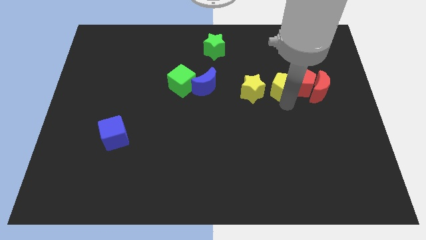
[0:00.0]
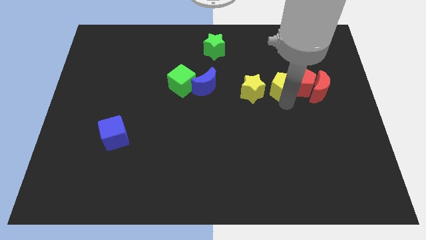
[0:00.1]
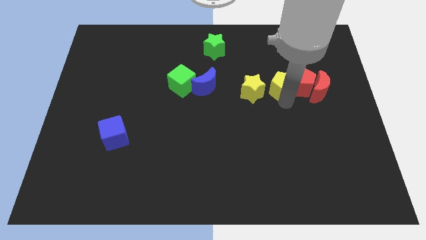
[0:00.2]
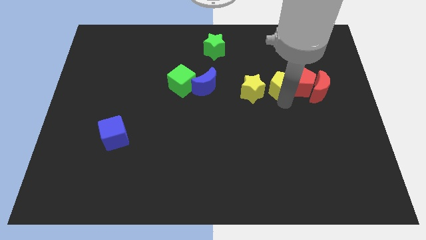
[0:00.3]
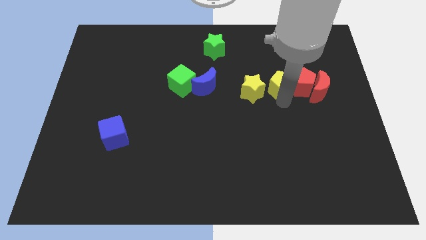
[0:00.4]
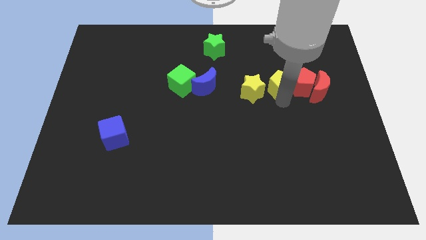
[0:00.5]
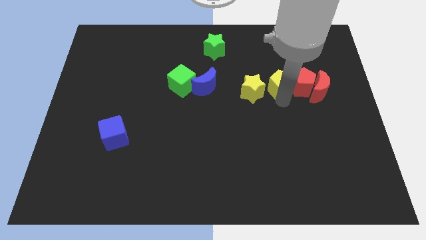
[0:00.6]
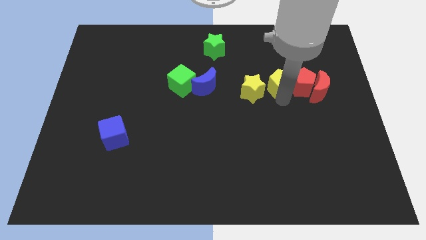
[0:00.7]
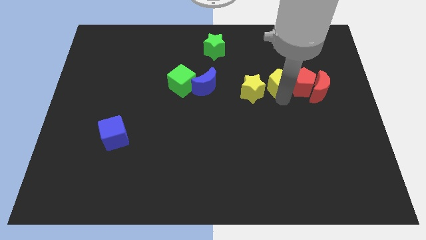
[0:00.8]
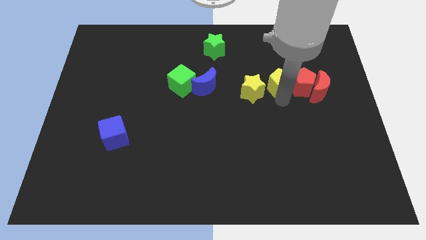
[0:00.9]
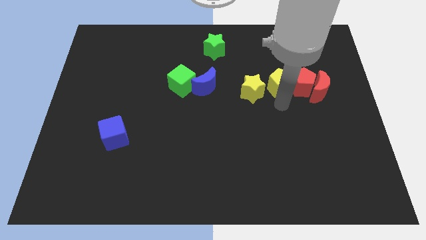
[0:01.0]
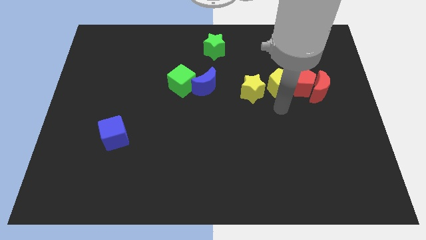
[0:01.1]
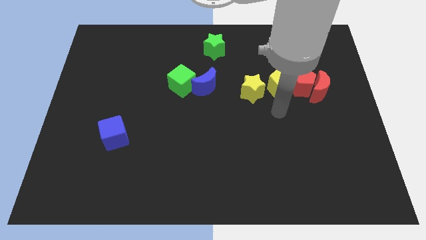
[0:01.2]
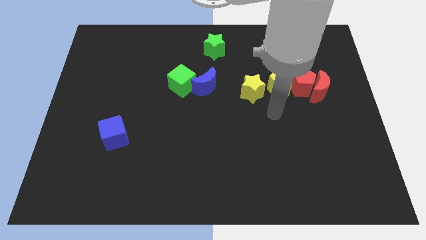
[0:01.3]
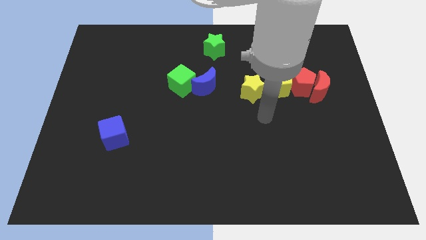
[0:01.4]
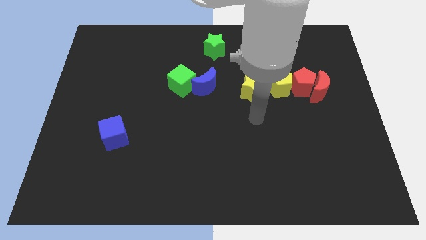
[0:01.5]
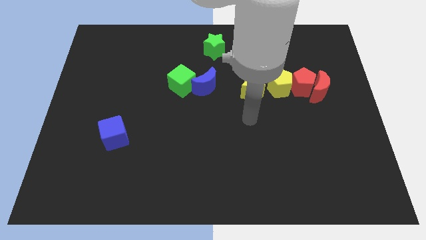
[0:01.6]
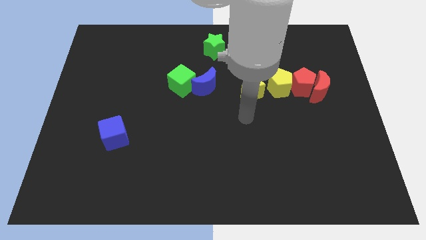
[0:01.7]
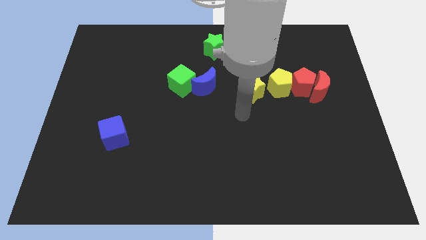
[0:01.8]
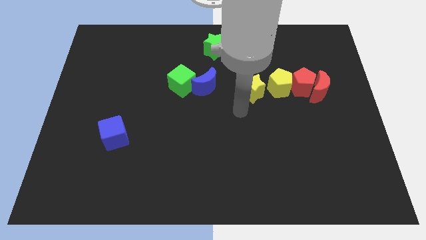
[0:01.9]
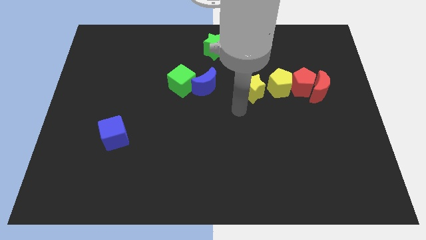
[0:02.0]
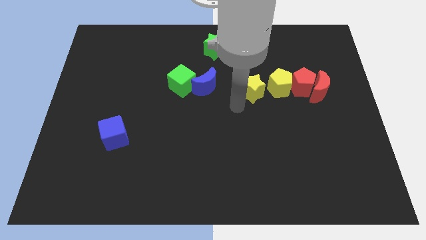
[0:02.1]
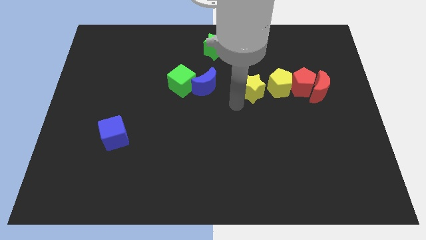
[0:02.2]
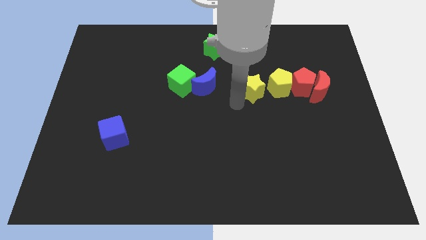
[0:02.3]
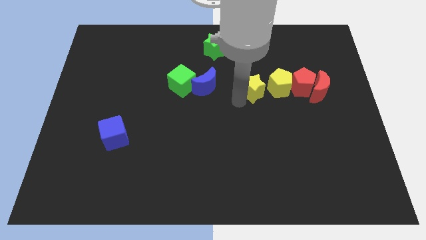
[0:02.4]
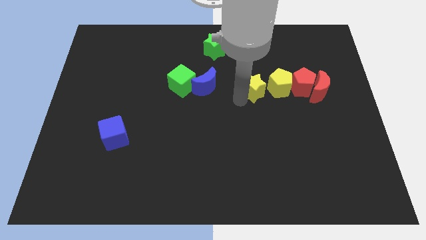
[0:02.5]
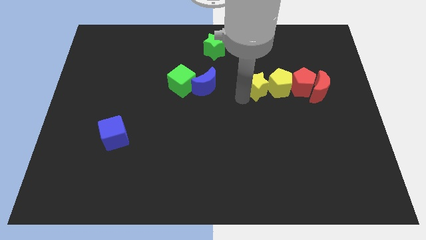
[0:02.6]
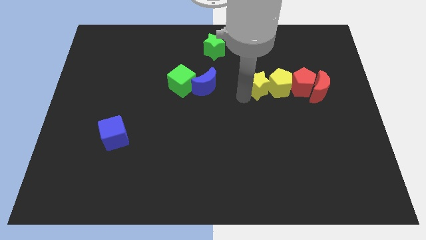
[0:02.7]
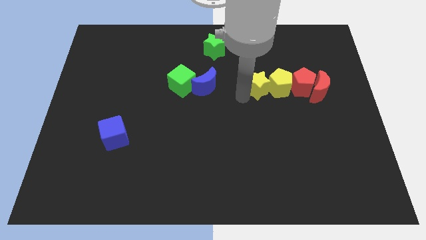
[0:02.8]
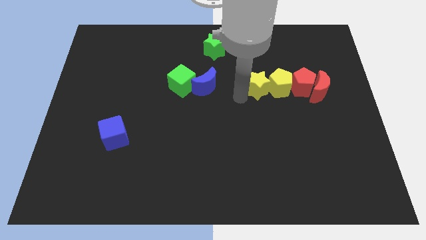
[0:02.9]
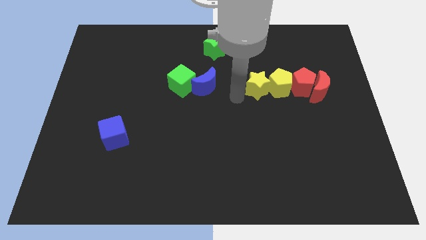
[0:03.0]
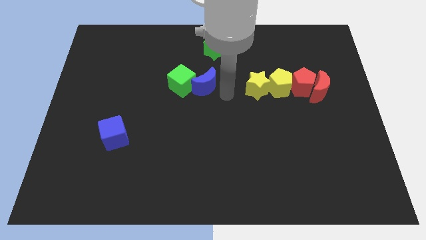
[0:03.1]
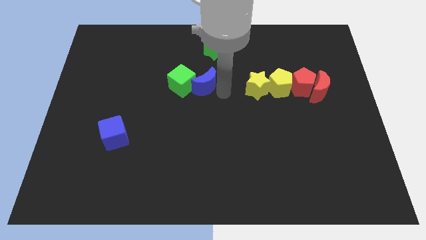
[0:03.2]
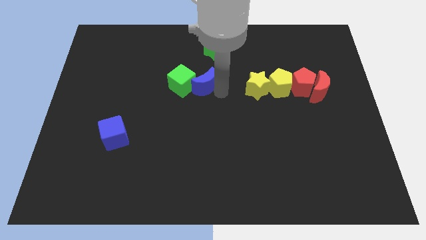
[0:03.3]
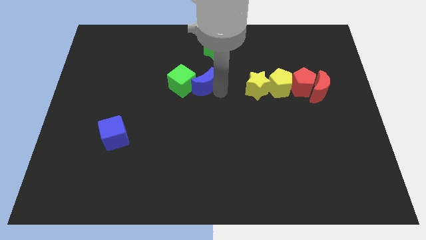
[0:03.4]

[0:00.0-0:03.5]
move the yellow star slightly to the right of the yellow pentagon

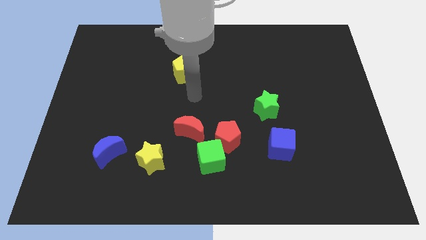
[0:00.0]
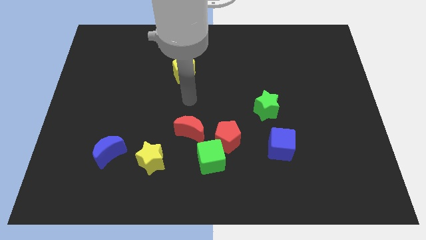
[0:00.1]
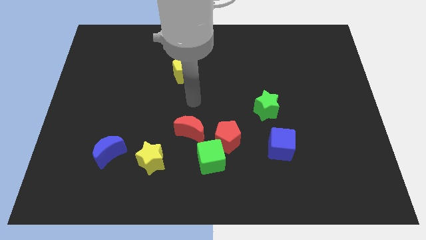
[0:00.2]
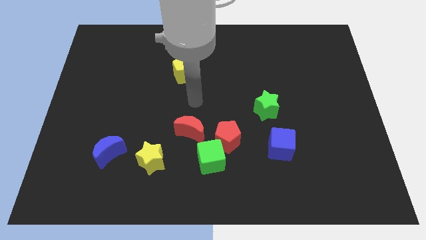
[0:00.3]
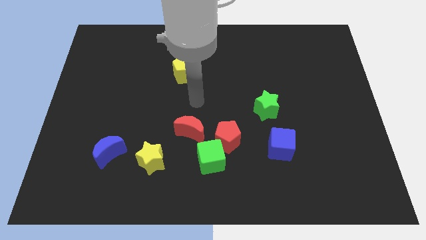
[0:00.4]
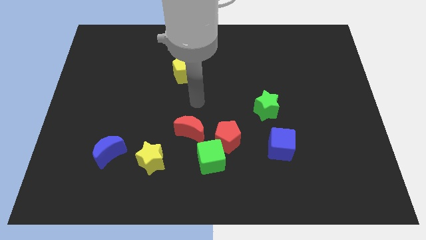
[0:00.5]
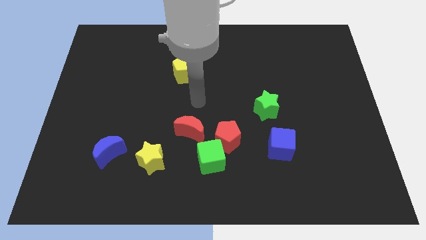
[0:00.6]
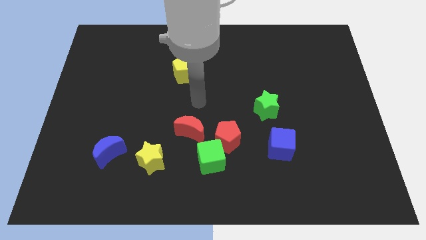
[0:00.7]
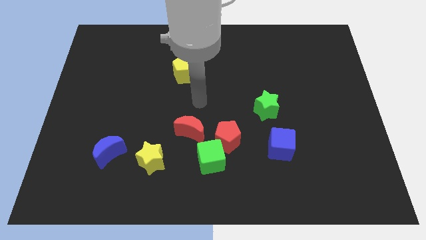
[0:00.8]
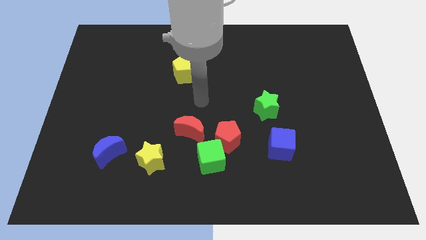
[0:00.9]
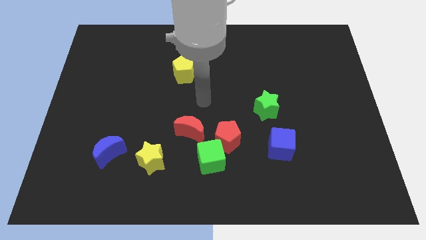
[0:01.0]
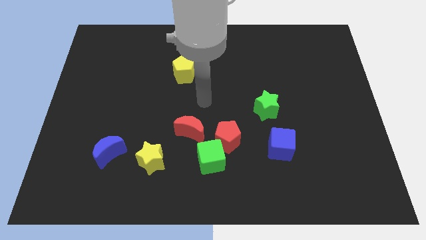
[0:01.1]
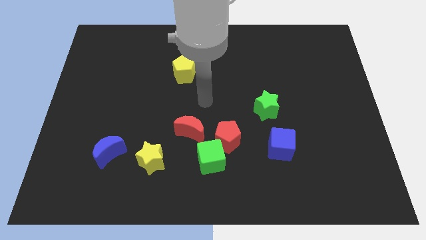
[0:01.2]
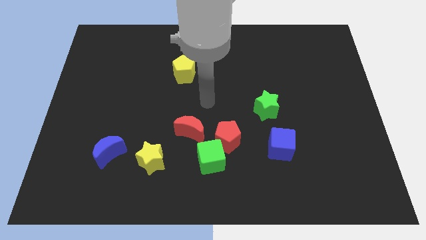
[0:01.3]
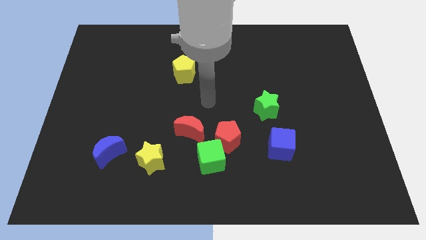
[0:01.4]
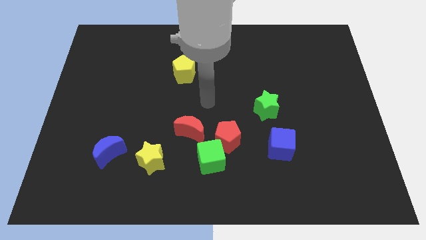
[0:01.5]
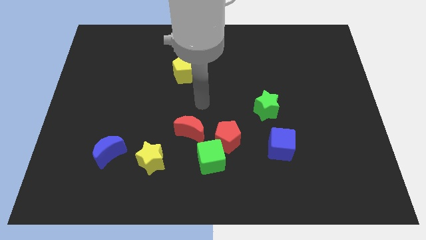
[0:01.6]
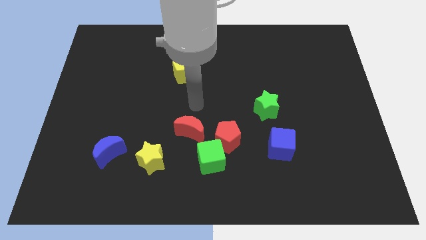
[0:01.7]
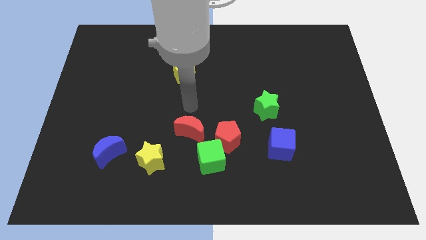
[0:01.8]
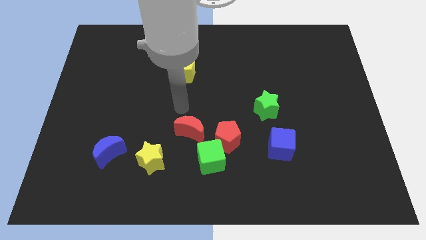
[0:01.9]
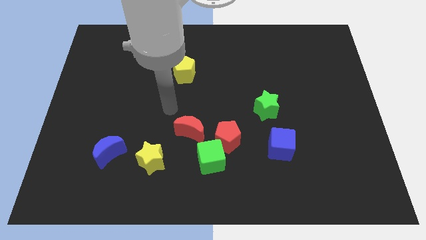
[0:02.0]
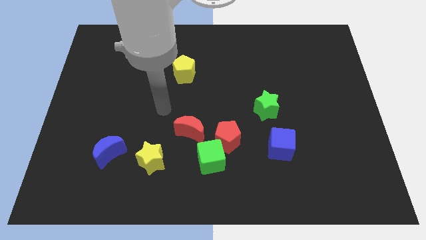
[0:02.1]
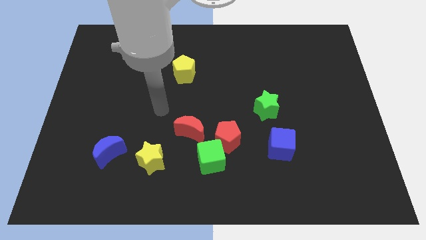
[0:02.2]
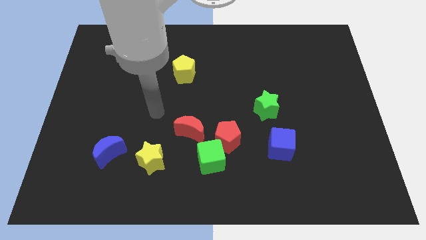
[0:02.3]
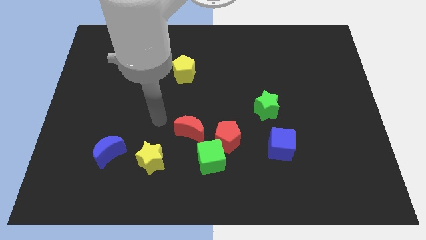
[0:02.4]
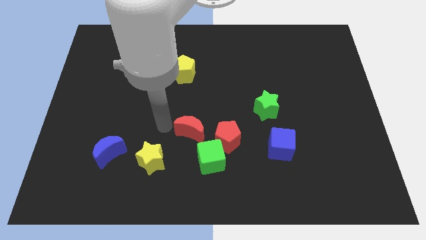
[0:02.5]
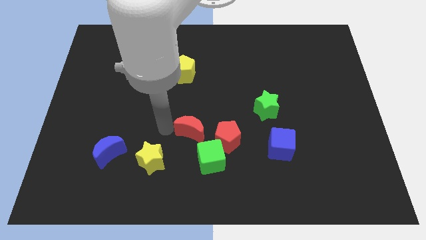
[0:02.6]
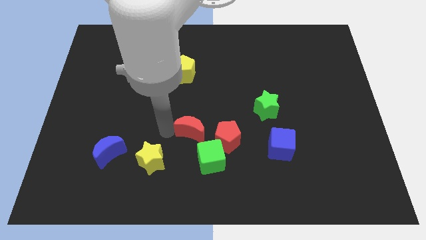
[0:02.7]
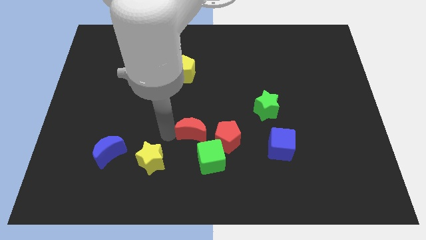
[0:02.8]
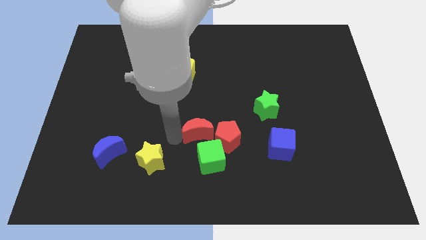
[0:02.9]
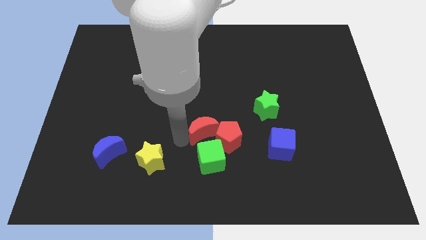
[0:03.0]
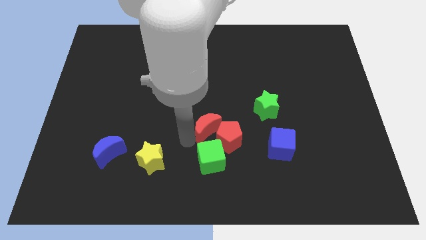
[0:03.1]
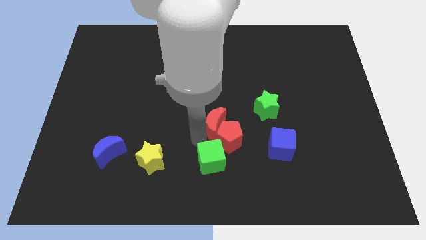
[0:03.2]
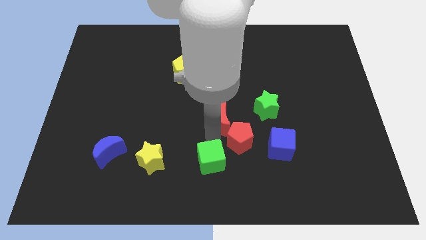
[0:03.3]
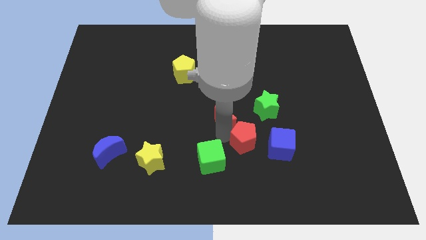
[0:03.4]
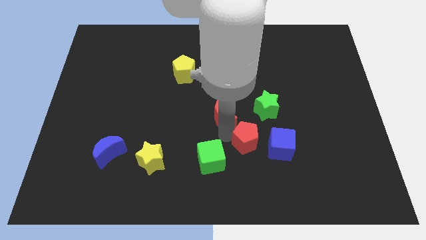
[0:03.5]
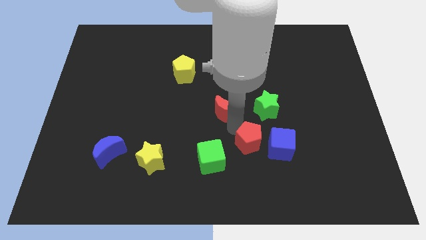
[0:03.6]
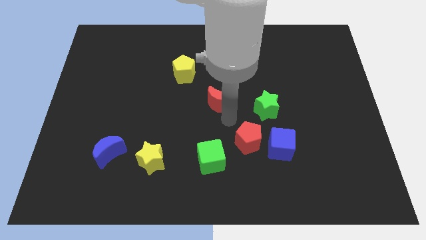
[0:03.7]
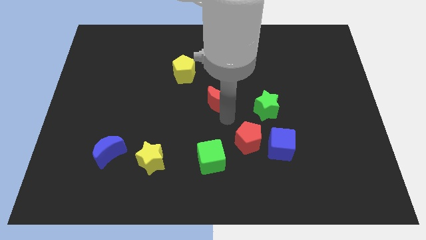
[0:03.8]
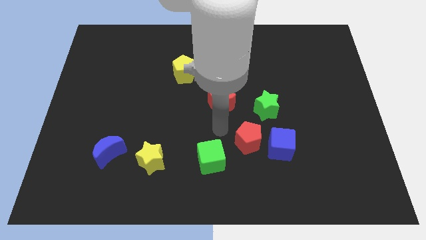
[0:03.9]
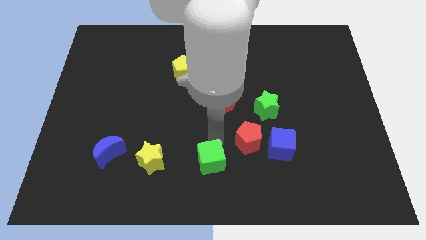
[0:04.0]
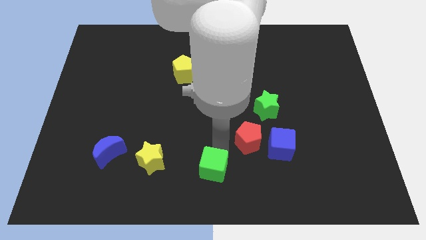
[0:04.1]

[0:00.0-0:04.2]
place the red moon to the left of the green star

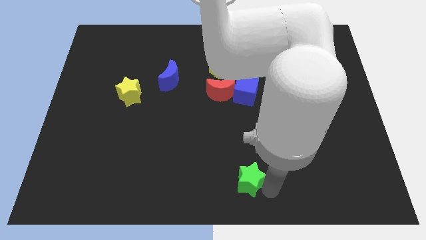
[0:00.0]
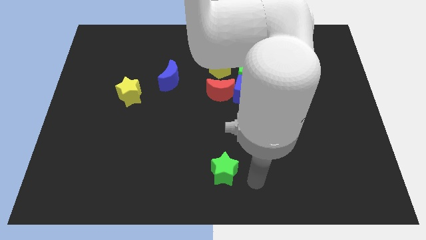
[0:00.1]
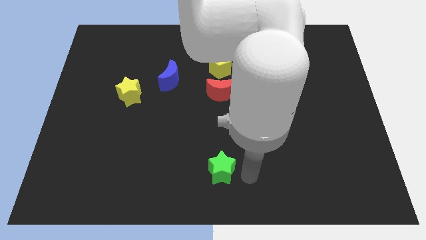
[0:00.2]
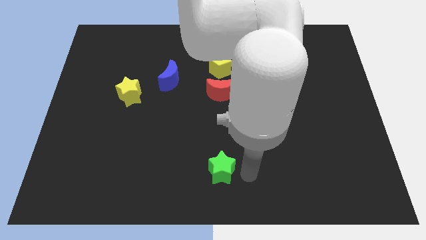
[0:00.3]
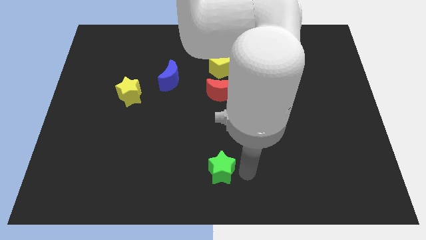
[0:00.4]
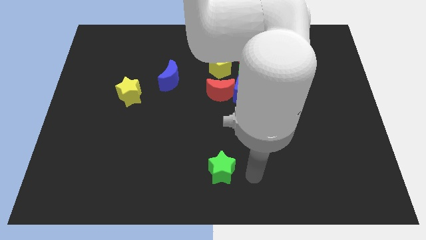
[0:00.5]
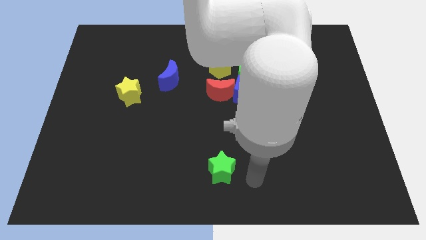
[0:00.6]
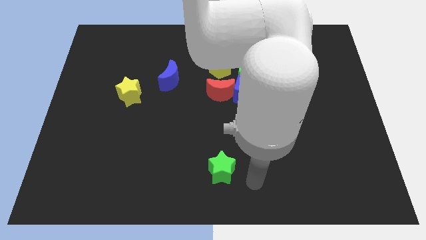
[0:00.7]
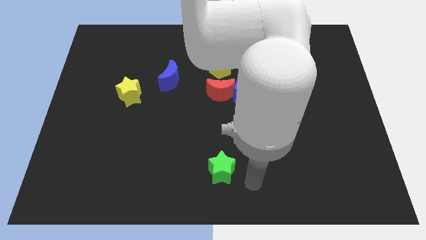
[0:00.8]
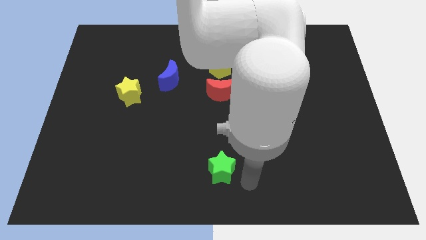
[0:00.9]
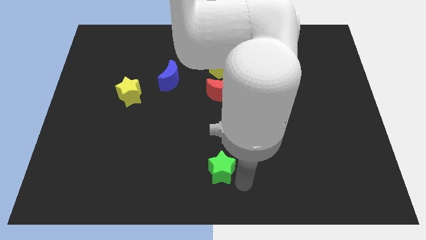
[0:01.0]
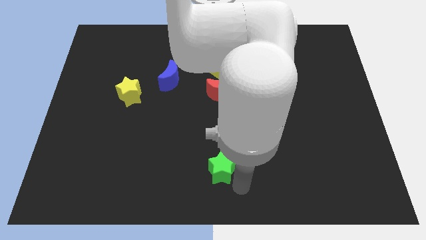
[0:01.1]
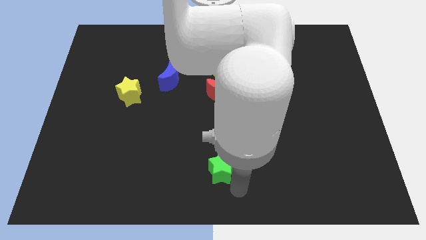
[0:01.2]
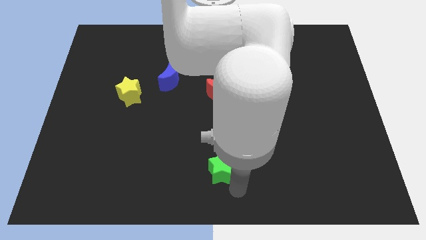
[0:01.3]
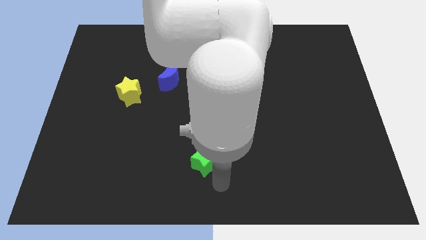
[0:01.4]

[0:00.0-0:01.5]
move the arm below the green star
